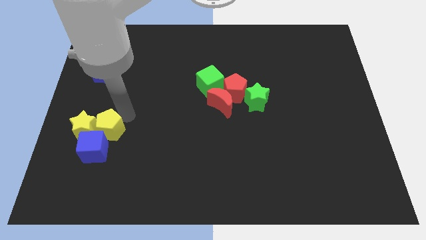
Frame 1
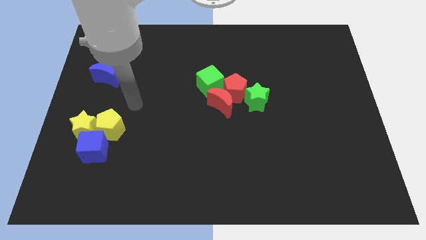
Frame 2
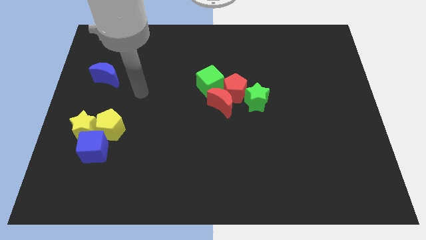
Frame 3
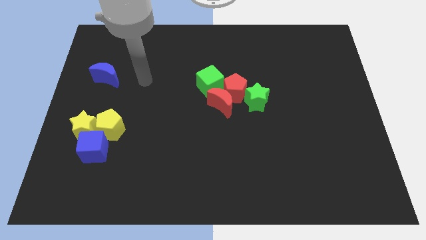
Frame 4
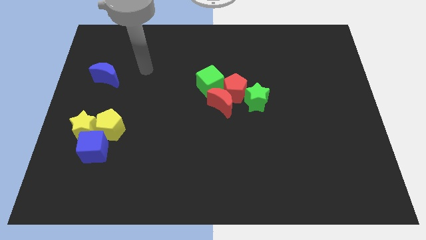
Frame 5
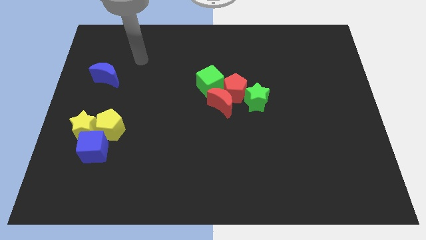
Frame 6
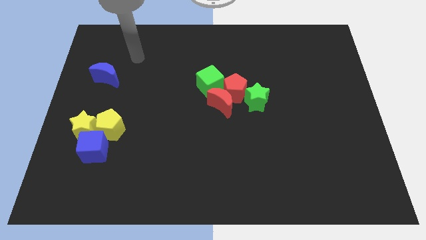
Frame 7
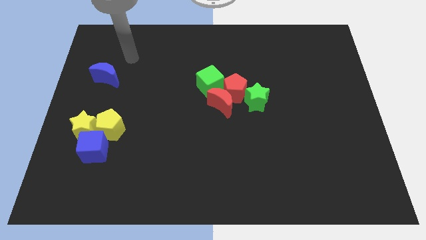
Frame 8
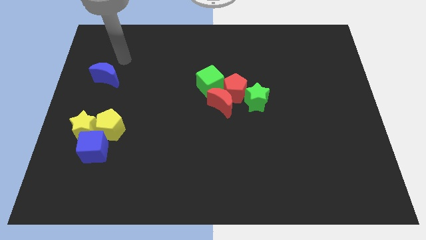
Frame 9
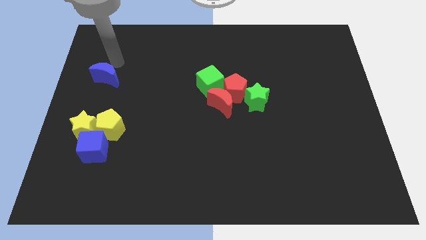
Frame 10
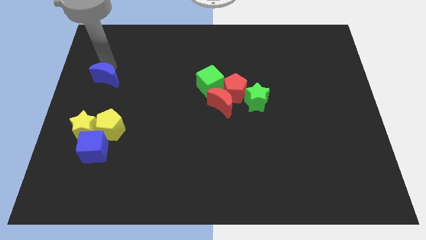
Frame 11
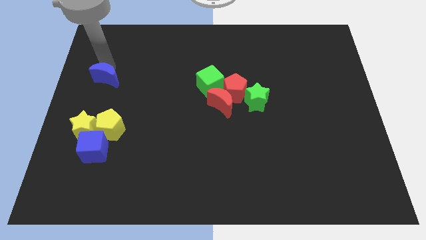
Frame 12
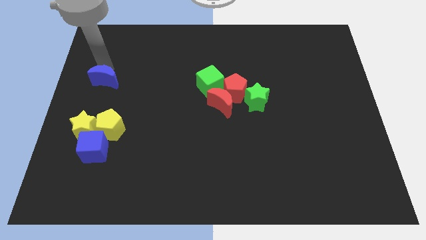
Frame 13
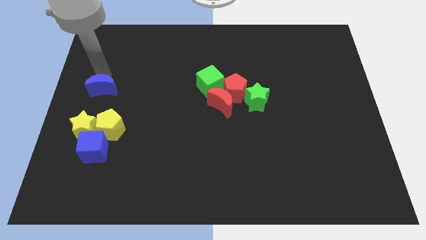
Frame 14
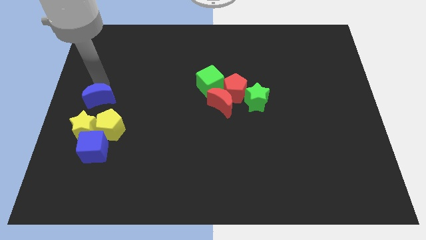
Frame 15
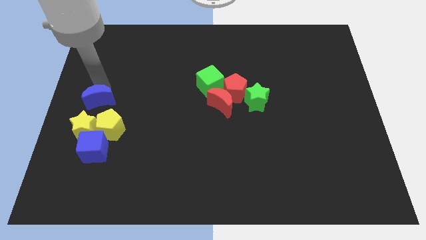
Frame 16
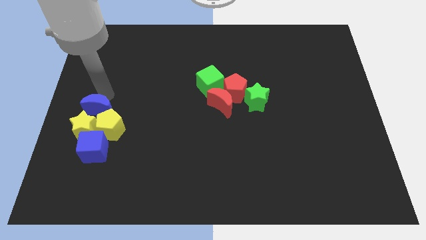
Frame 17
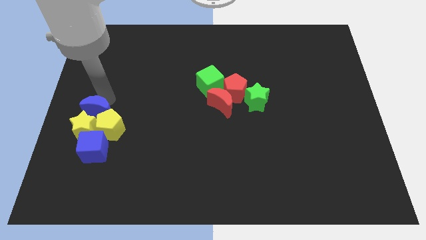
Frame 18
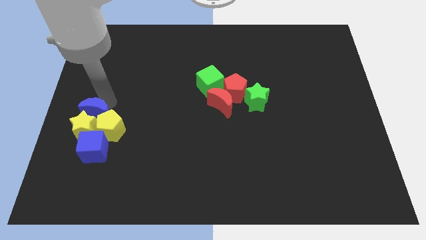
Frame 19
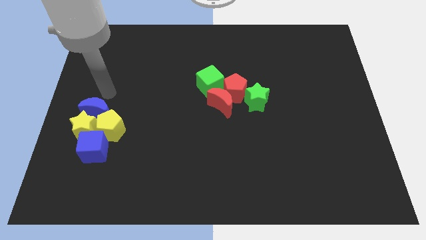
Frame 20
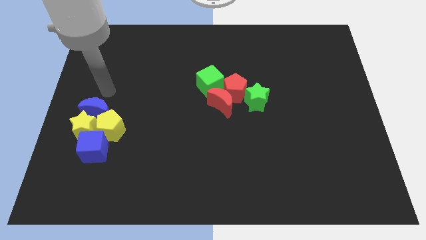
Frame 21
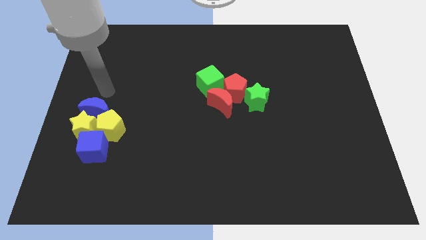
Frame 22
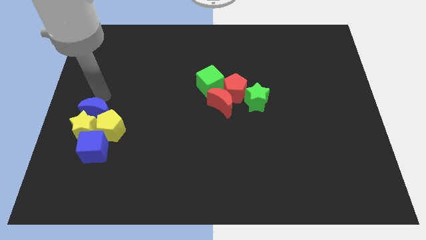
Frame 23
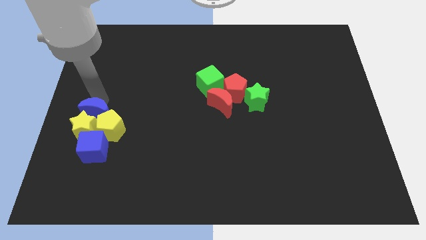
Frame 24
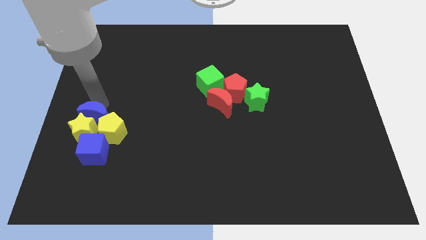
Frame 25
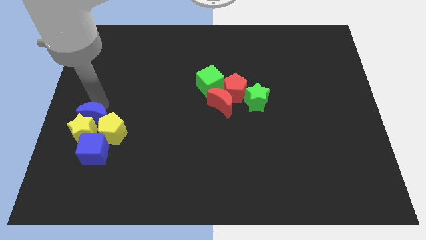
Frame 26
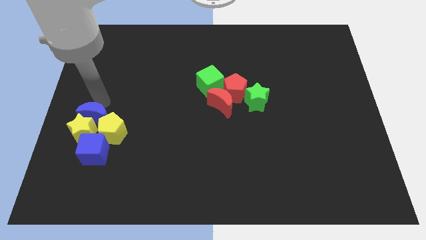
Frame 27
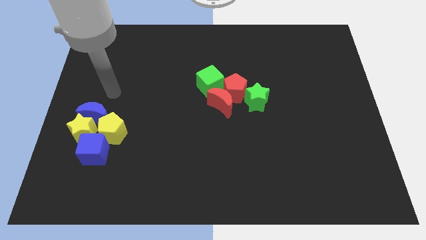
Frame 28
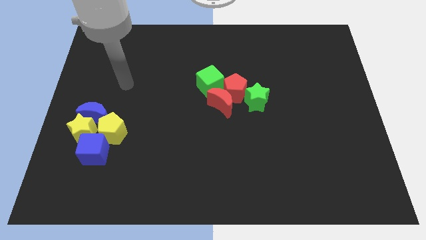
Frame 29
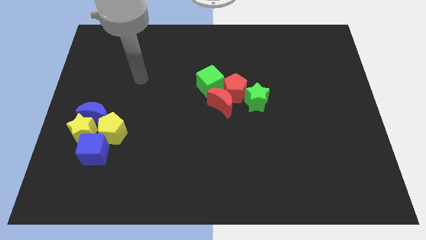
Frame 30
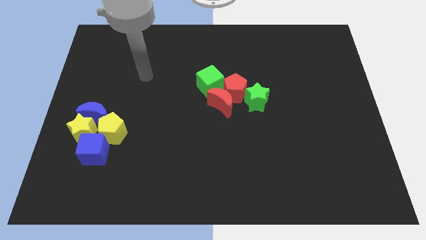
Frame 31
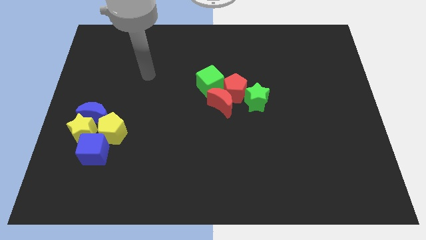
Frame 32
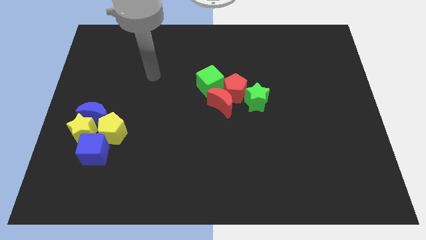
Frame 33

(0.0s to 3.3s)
slide the blue crescent into the yellow blocks

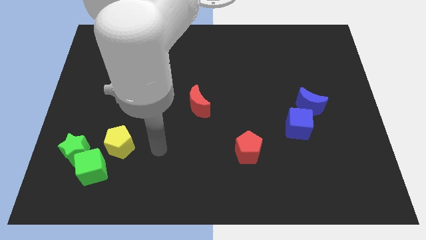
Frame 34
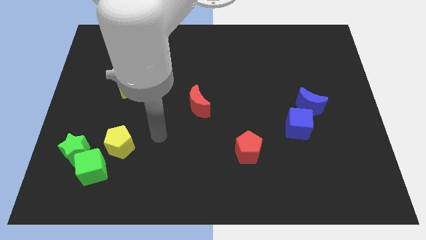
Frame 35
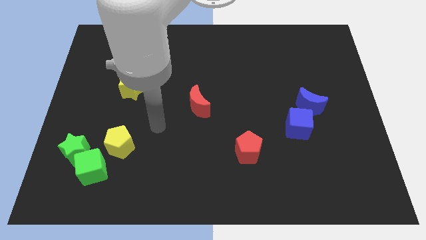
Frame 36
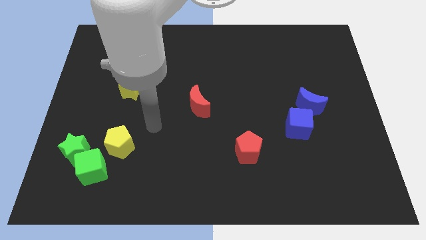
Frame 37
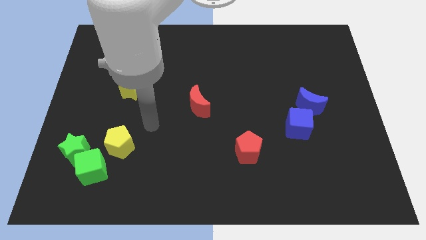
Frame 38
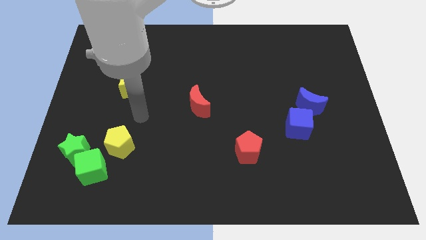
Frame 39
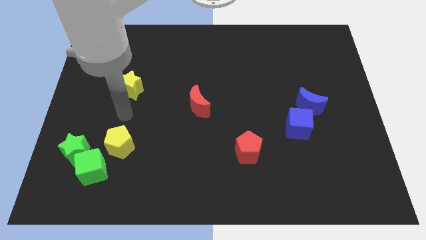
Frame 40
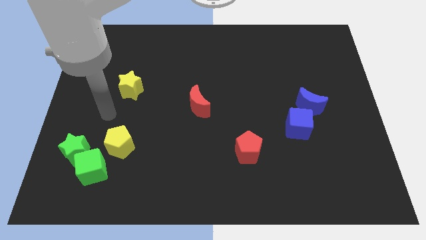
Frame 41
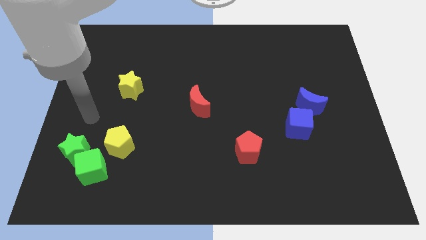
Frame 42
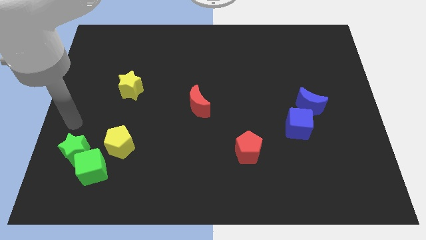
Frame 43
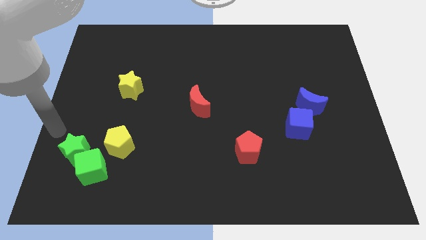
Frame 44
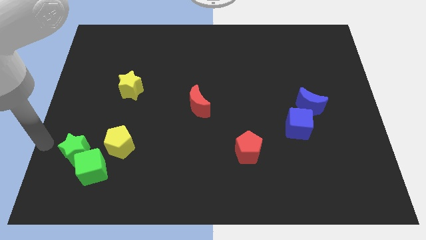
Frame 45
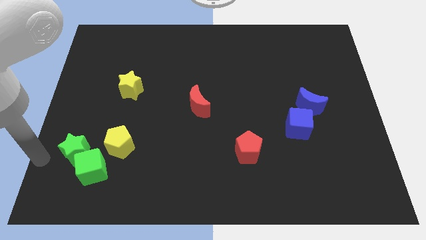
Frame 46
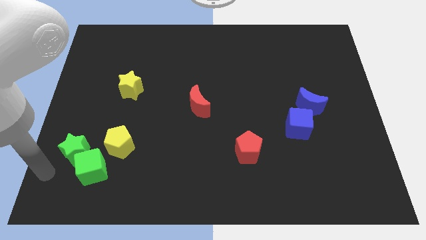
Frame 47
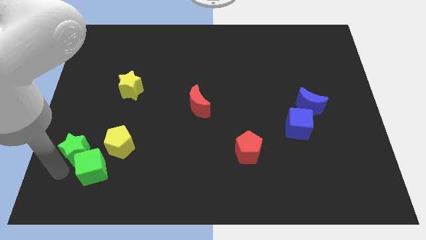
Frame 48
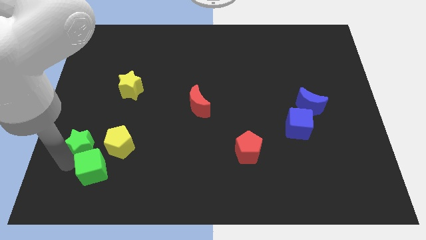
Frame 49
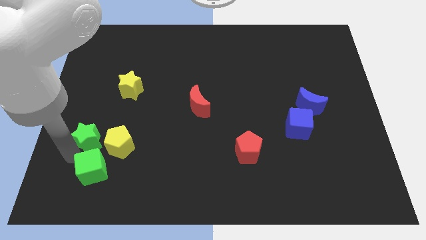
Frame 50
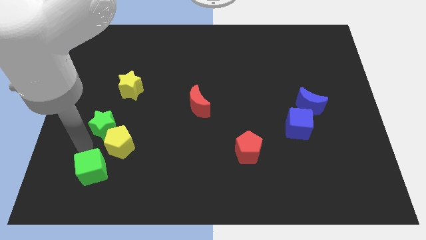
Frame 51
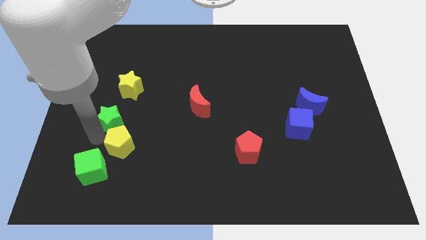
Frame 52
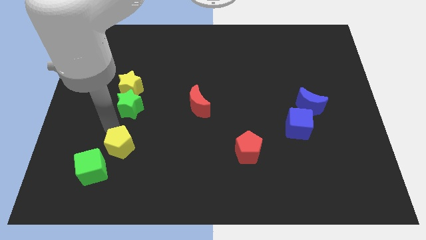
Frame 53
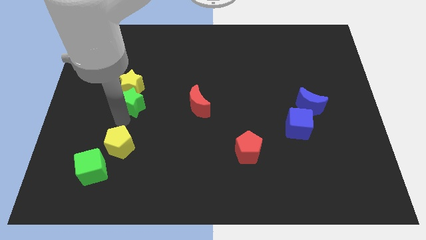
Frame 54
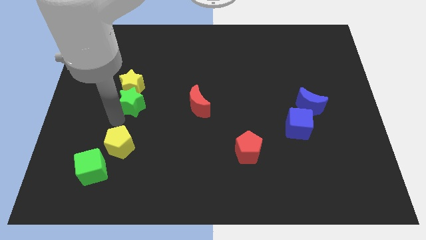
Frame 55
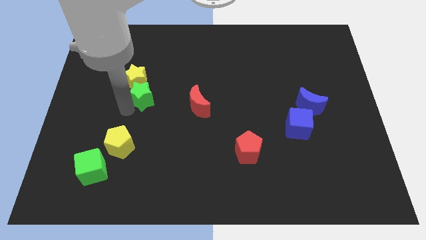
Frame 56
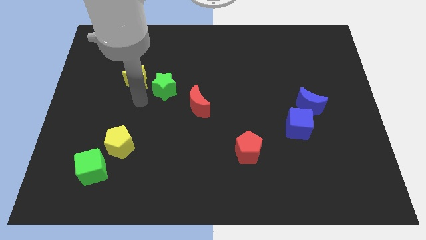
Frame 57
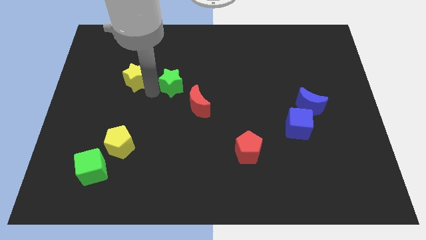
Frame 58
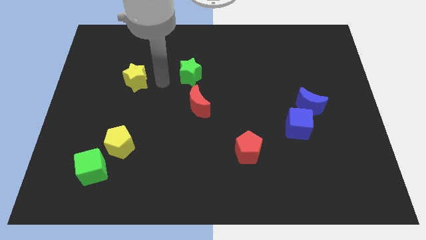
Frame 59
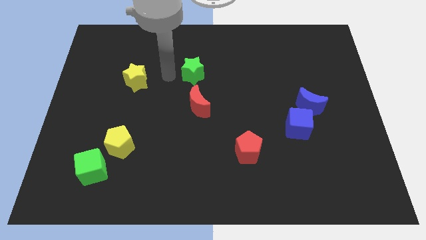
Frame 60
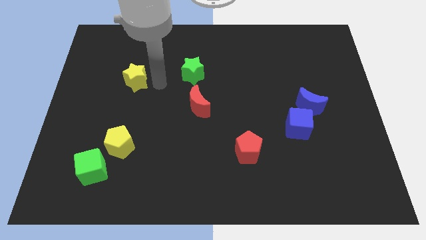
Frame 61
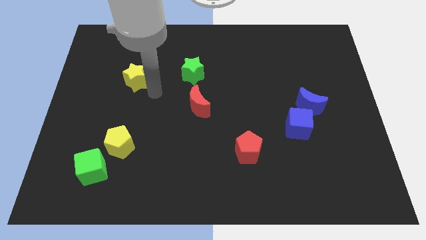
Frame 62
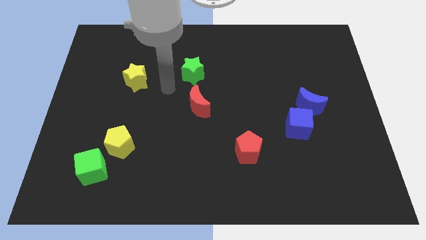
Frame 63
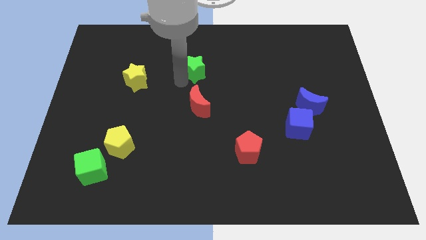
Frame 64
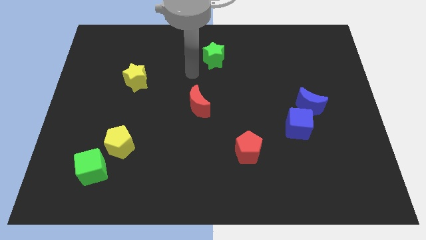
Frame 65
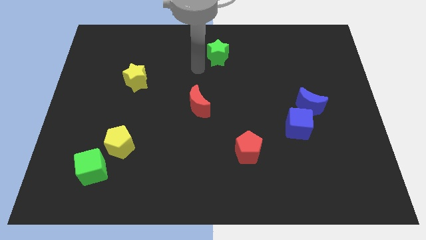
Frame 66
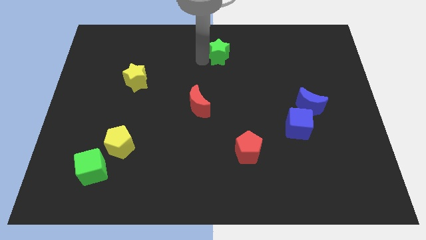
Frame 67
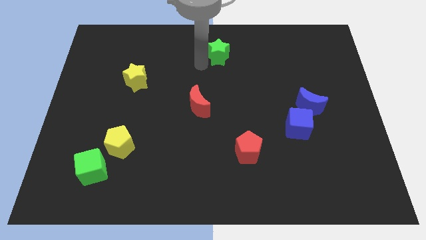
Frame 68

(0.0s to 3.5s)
move the green star upwards of the board

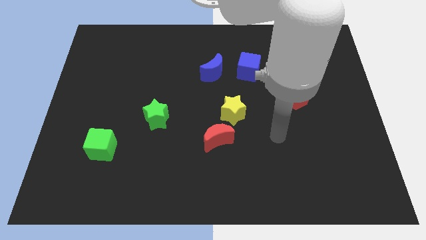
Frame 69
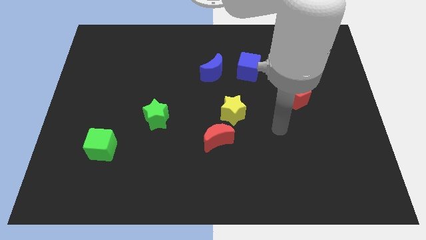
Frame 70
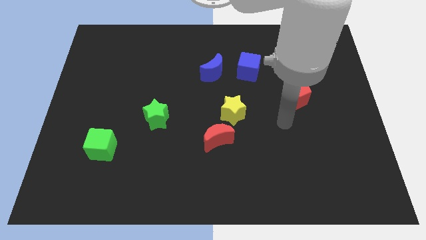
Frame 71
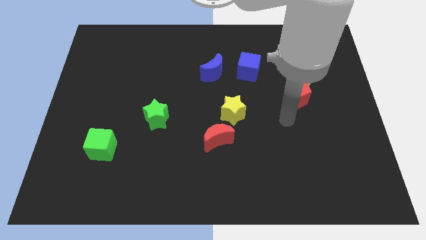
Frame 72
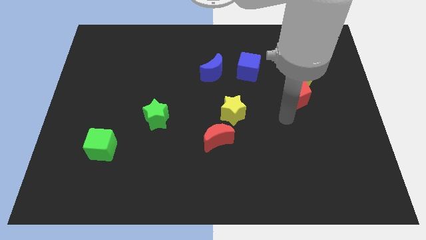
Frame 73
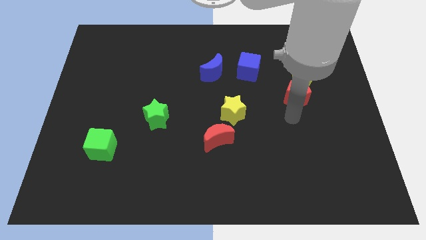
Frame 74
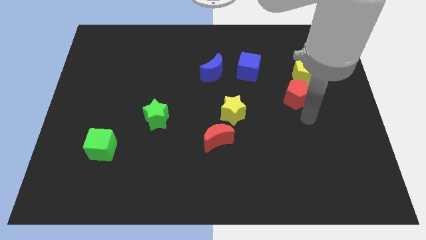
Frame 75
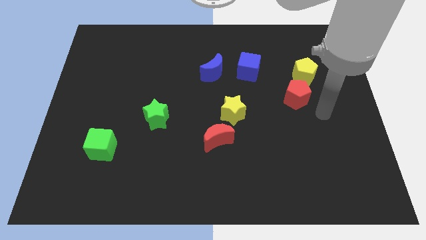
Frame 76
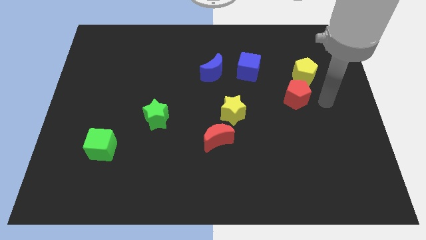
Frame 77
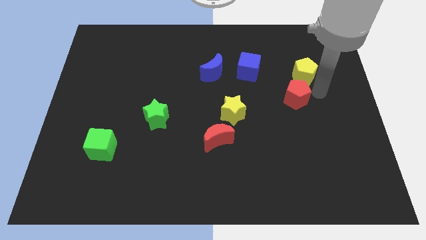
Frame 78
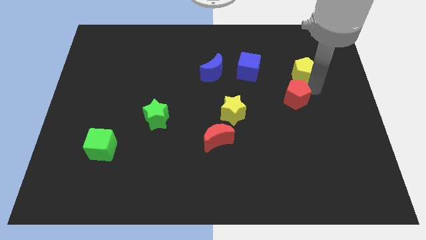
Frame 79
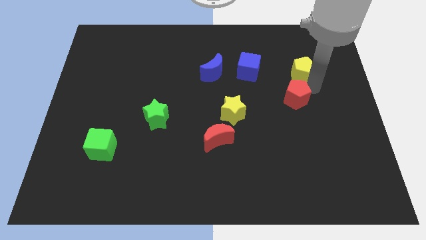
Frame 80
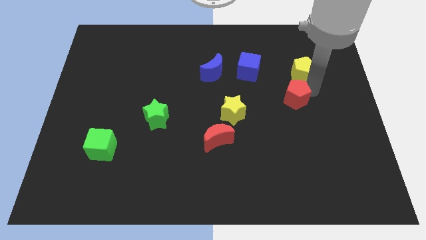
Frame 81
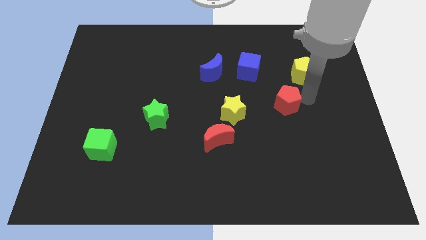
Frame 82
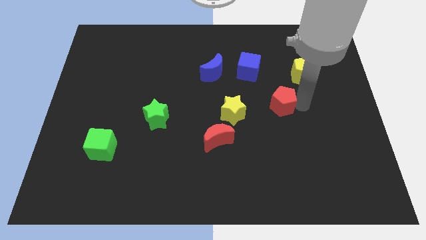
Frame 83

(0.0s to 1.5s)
separate red pentagon and the yellow pentagon

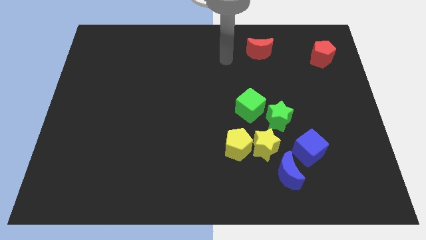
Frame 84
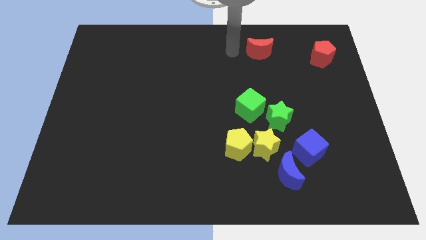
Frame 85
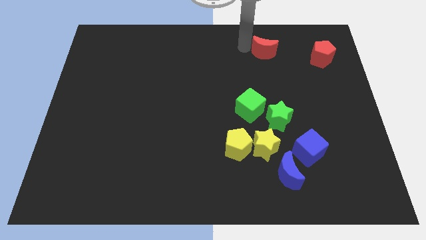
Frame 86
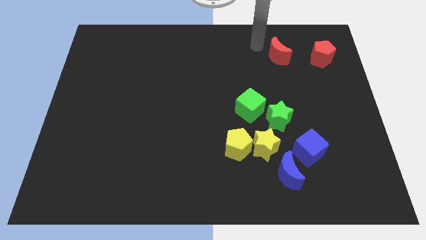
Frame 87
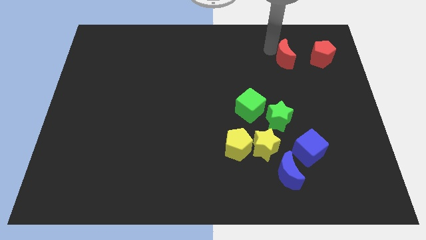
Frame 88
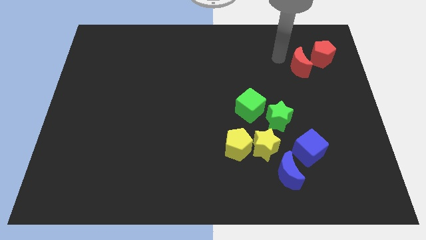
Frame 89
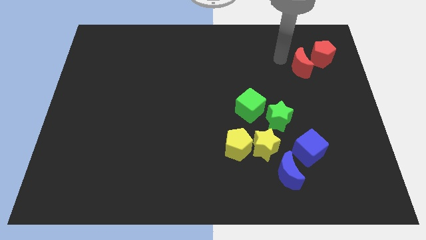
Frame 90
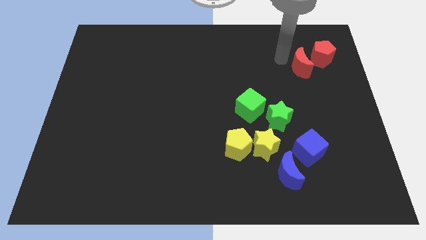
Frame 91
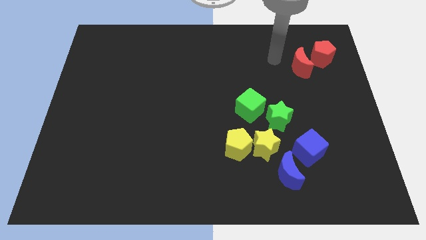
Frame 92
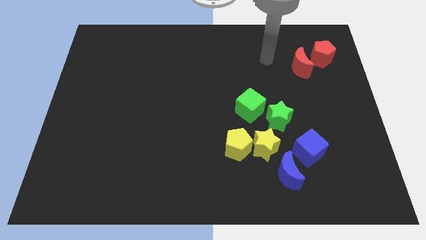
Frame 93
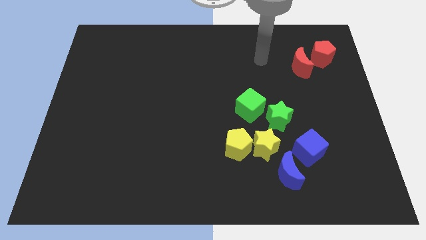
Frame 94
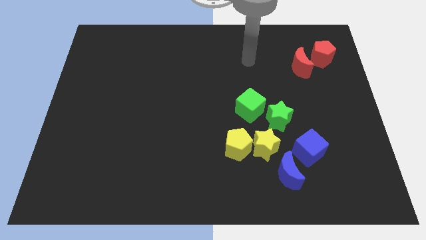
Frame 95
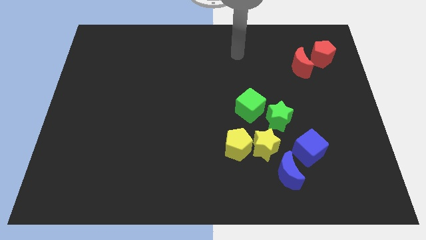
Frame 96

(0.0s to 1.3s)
push the red crescent to the right of the board
